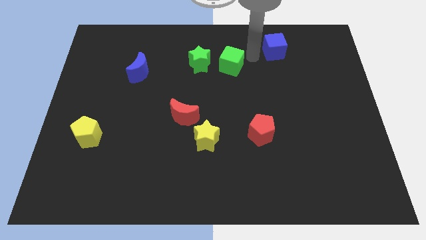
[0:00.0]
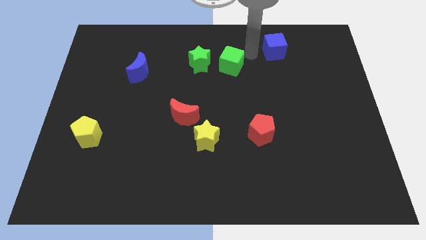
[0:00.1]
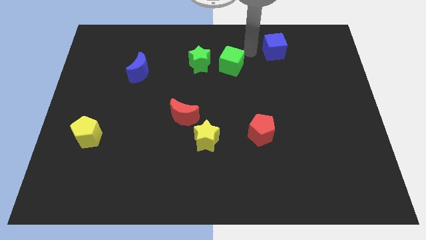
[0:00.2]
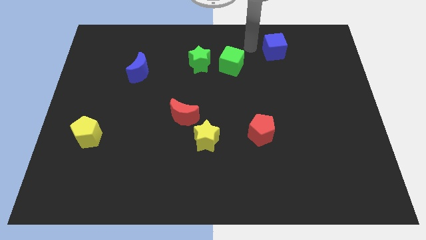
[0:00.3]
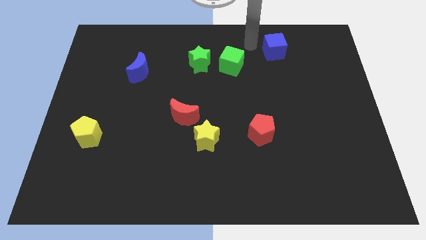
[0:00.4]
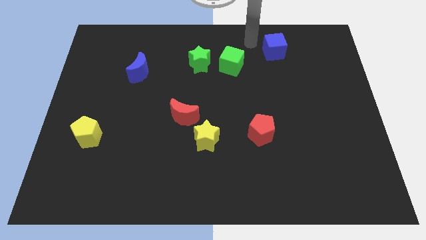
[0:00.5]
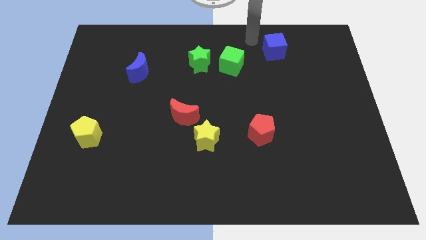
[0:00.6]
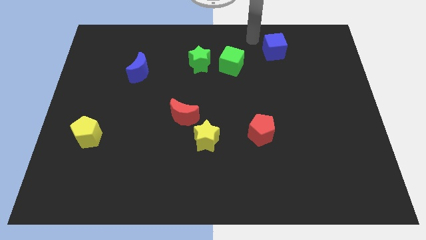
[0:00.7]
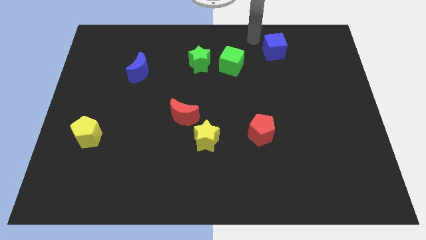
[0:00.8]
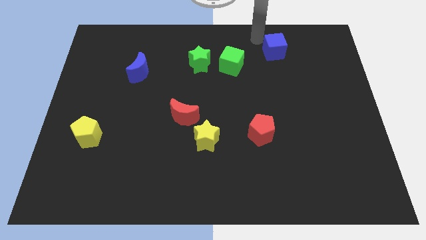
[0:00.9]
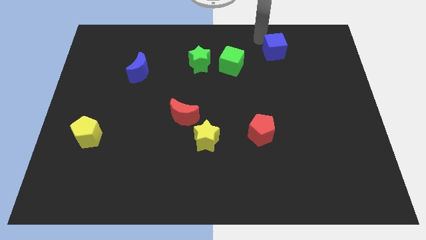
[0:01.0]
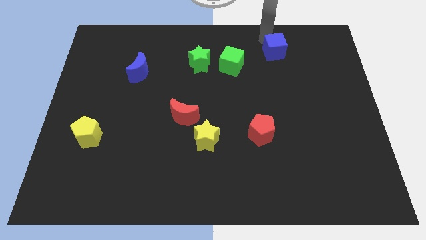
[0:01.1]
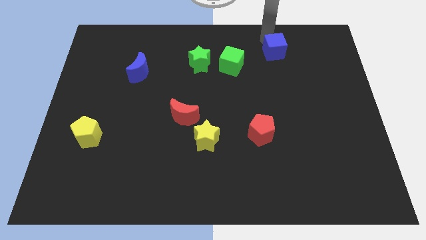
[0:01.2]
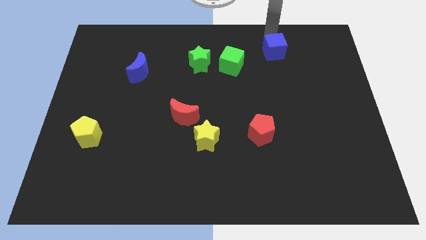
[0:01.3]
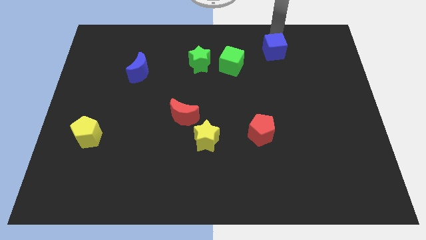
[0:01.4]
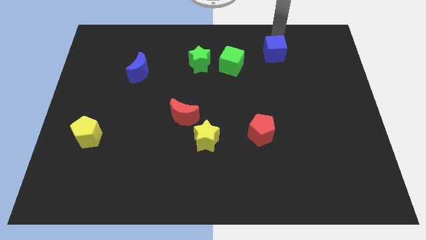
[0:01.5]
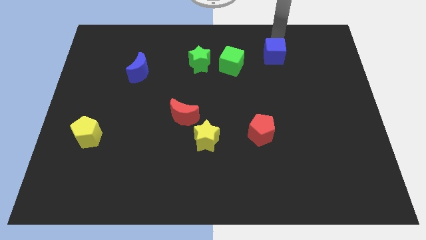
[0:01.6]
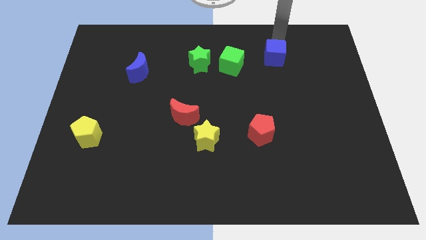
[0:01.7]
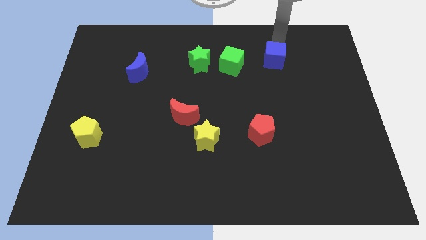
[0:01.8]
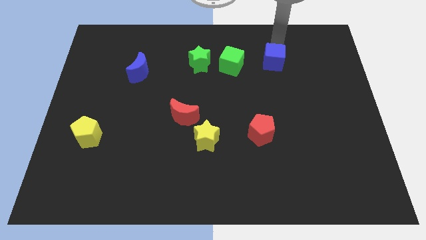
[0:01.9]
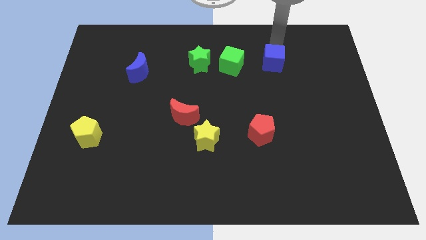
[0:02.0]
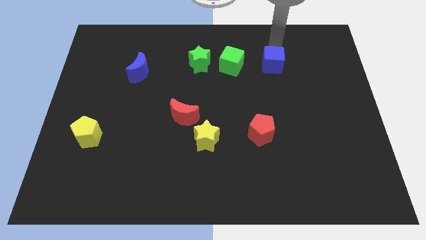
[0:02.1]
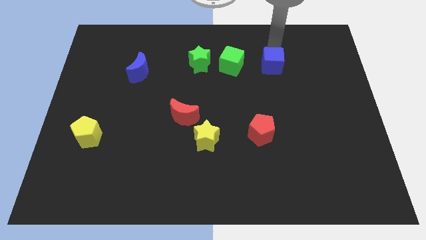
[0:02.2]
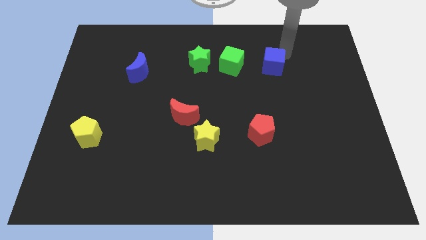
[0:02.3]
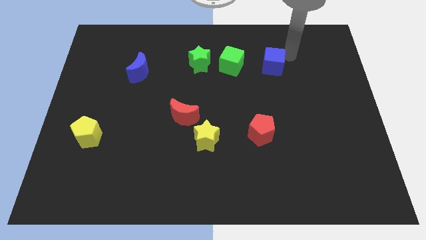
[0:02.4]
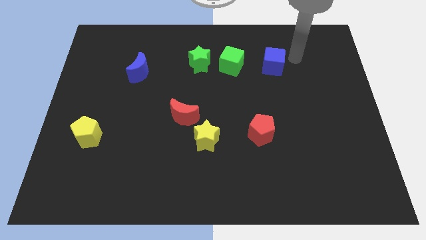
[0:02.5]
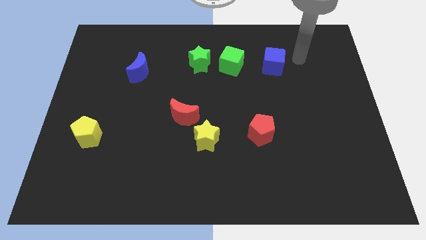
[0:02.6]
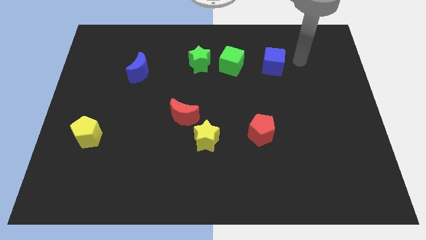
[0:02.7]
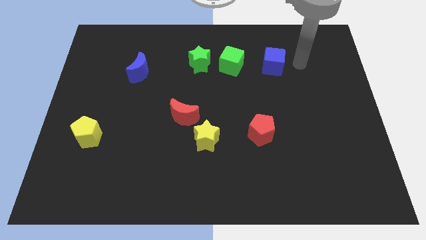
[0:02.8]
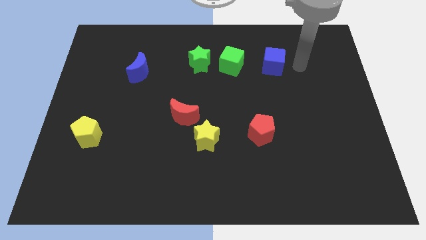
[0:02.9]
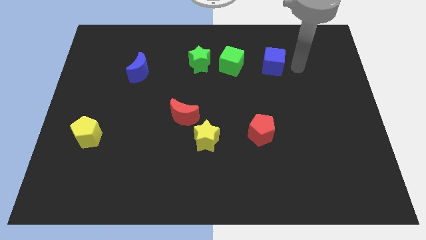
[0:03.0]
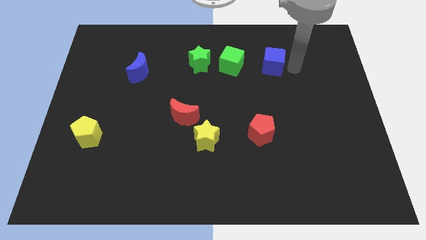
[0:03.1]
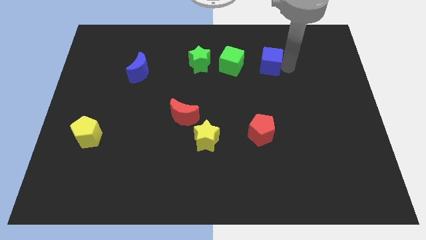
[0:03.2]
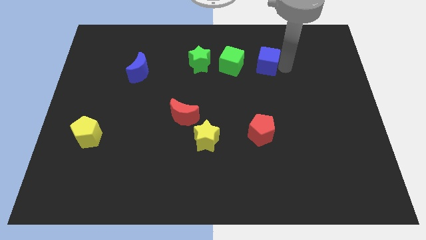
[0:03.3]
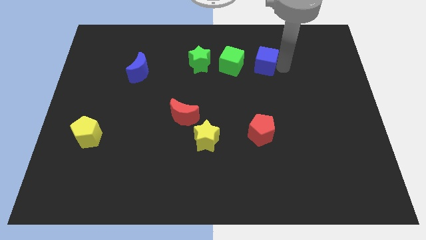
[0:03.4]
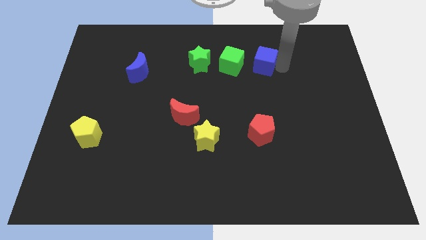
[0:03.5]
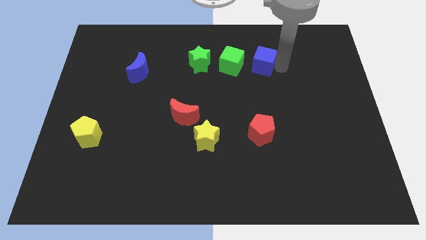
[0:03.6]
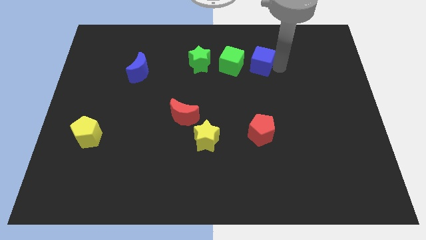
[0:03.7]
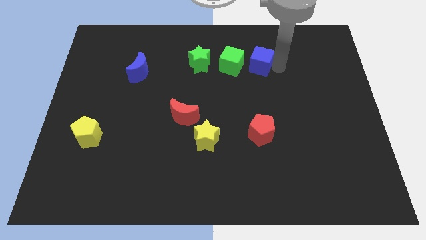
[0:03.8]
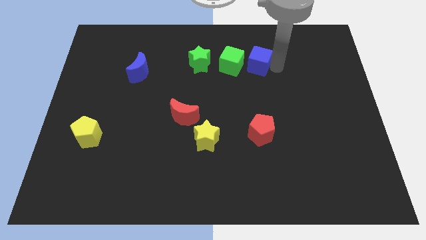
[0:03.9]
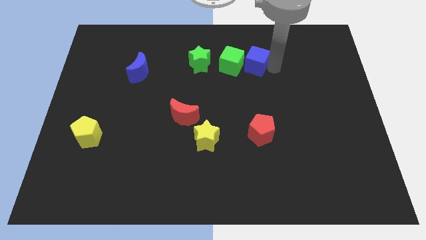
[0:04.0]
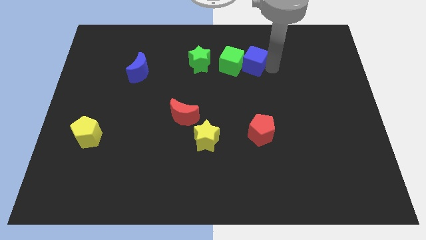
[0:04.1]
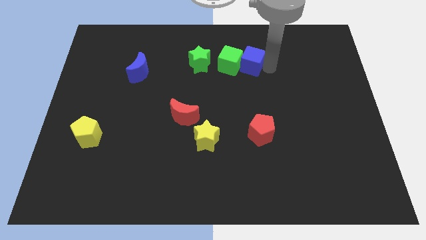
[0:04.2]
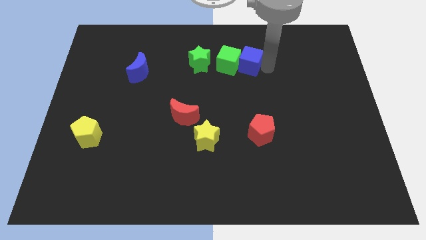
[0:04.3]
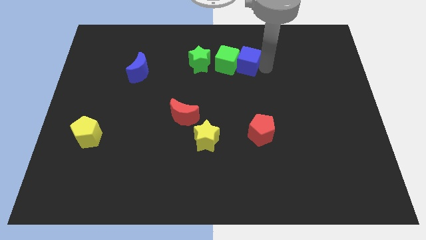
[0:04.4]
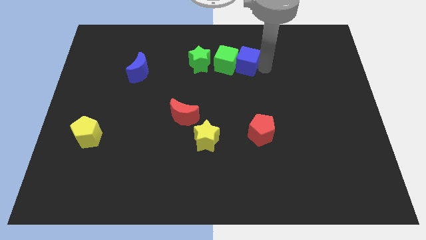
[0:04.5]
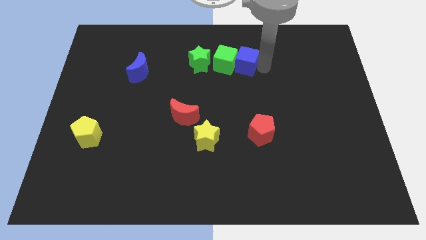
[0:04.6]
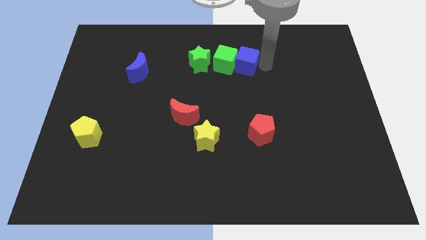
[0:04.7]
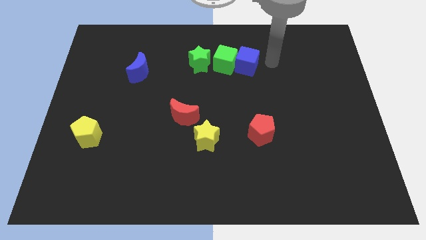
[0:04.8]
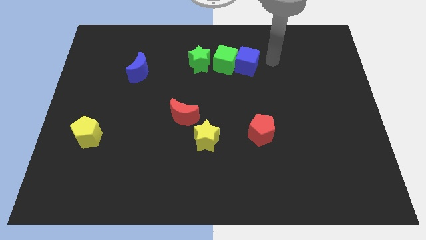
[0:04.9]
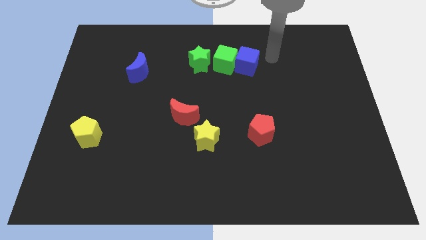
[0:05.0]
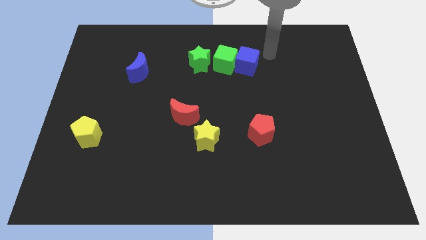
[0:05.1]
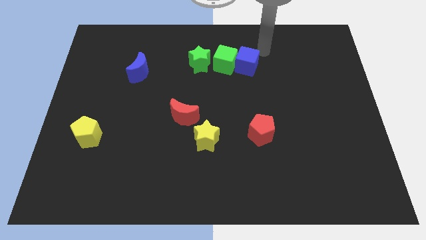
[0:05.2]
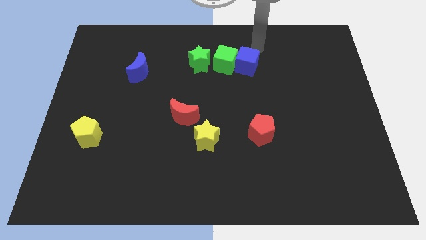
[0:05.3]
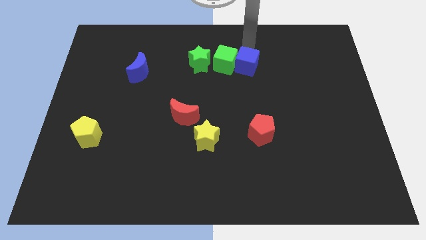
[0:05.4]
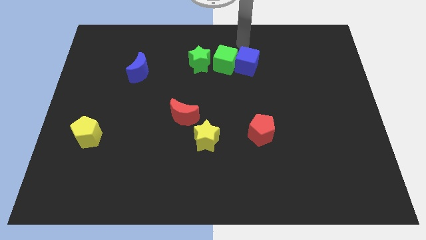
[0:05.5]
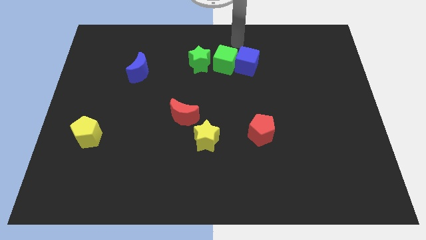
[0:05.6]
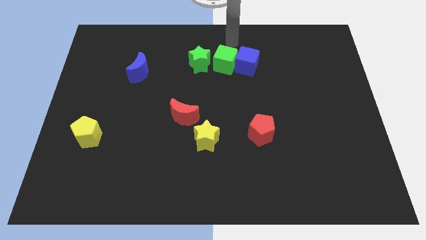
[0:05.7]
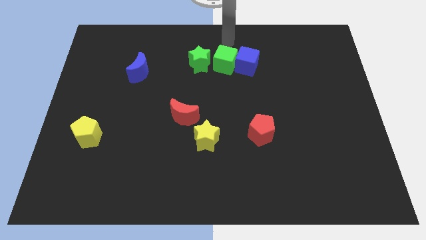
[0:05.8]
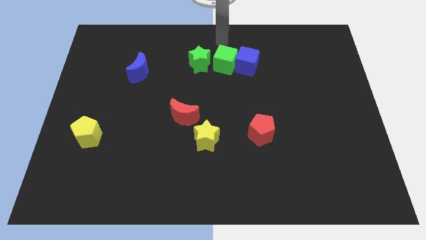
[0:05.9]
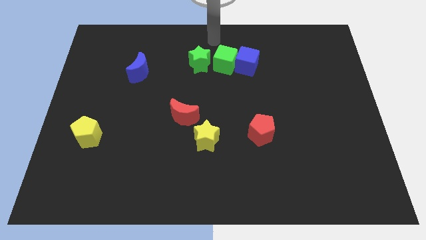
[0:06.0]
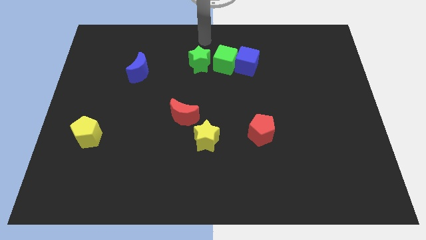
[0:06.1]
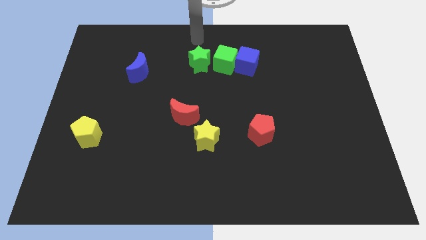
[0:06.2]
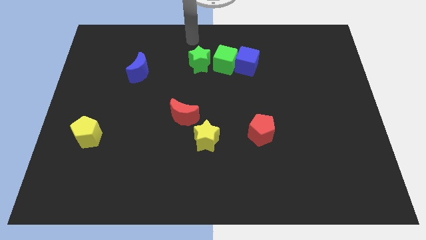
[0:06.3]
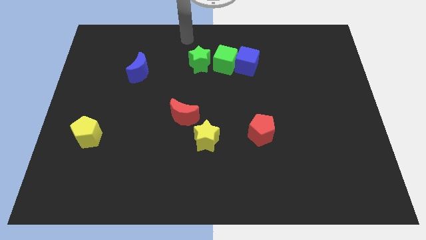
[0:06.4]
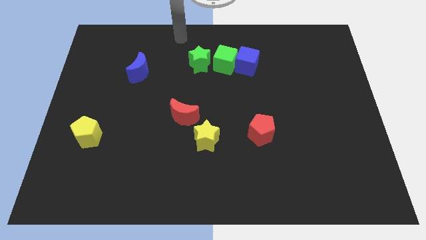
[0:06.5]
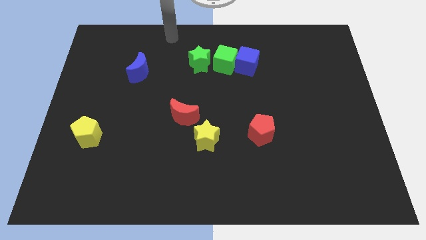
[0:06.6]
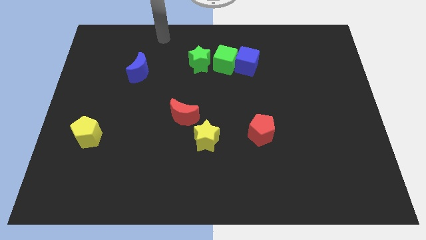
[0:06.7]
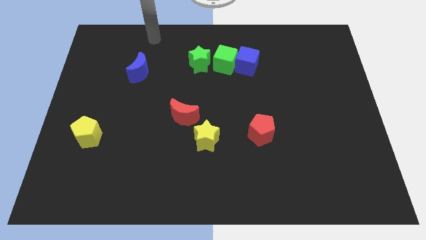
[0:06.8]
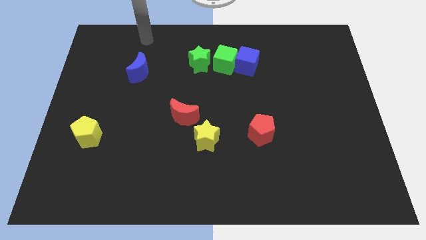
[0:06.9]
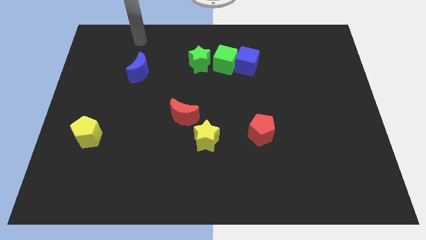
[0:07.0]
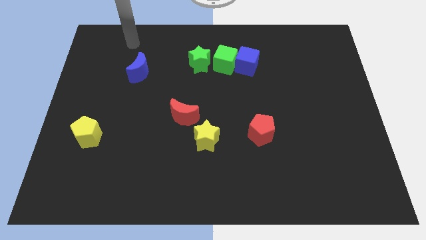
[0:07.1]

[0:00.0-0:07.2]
push the blue cube to the right of the green cube

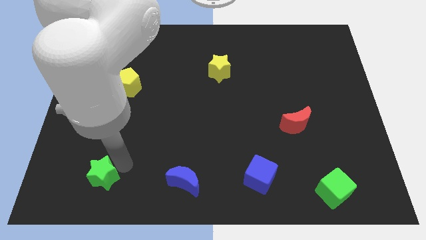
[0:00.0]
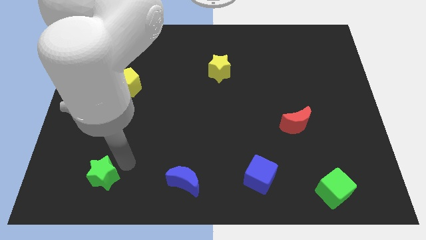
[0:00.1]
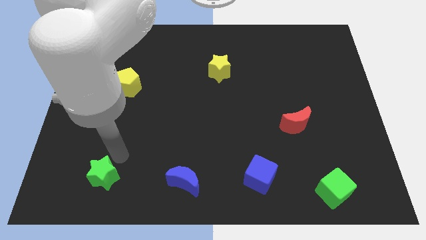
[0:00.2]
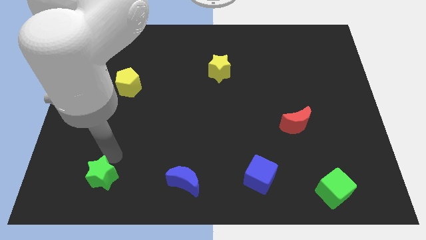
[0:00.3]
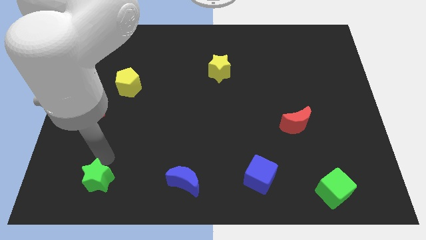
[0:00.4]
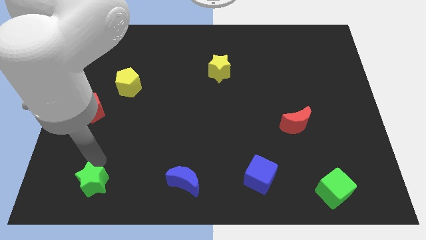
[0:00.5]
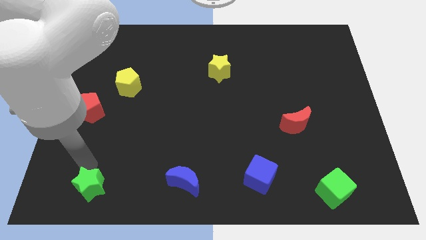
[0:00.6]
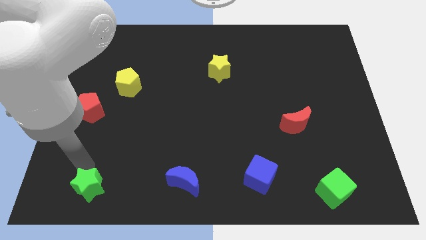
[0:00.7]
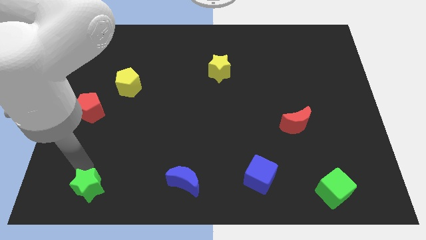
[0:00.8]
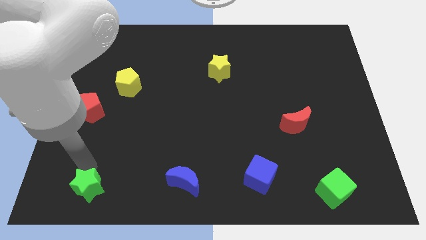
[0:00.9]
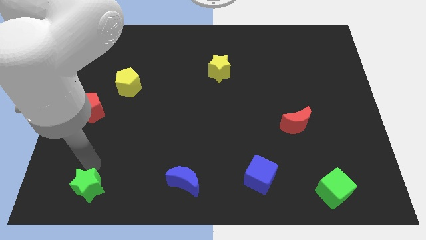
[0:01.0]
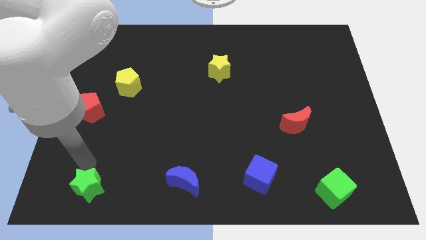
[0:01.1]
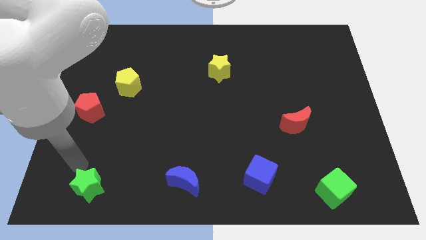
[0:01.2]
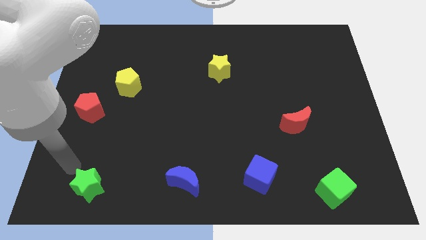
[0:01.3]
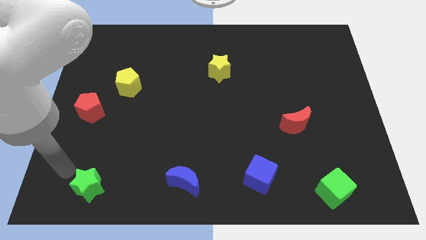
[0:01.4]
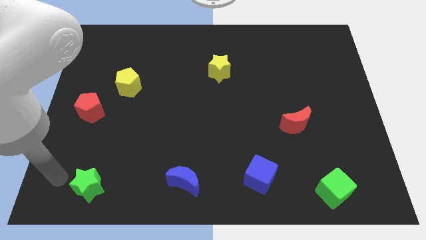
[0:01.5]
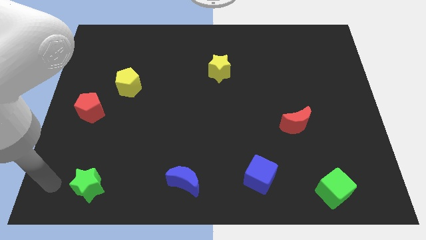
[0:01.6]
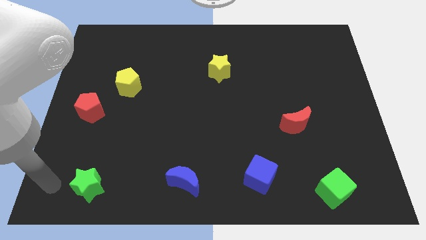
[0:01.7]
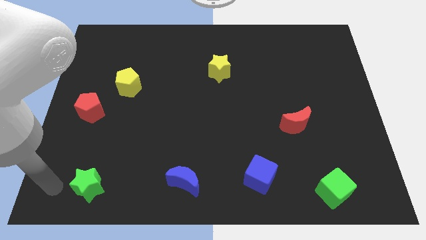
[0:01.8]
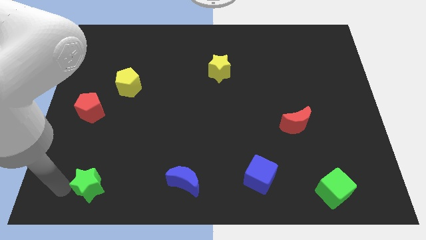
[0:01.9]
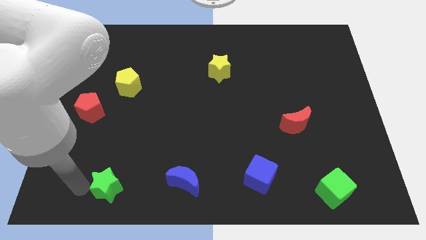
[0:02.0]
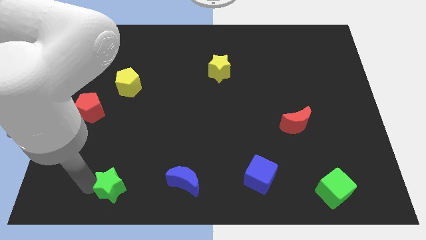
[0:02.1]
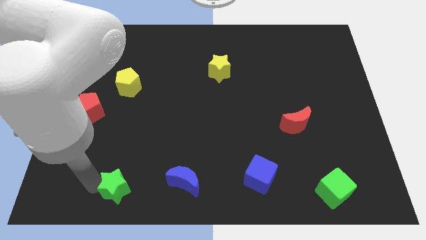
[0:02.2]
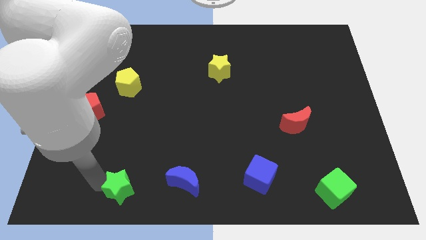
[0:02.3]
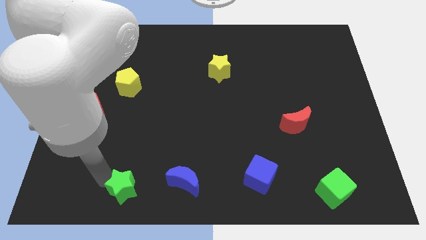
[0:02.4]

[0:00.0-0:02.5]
move the green star towards blue crescent
